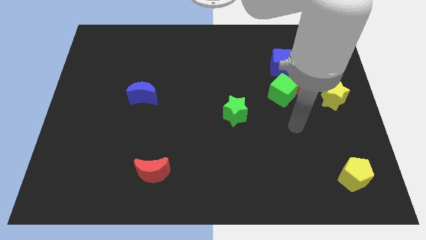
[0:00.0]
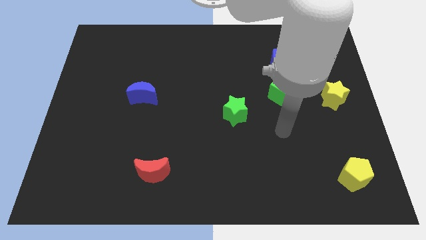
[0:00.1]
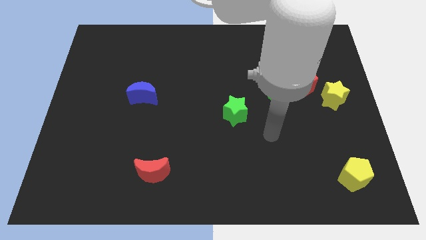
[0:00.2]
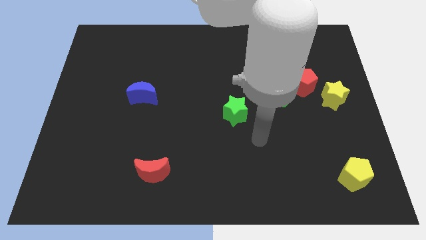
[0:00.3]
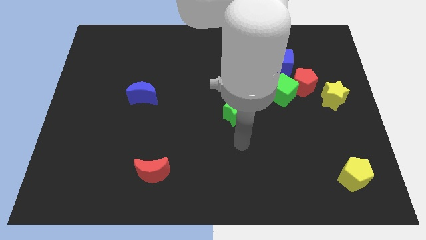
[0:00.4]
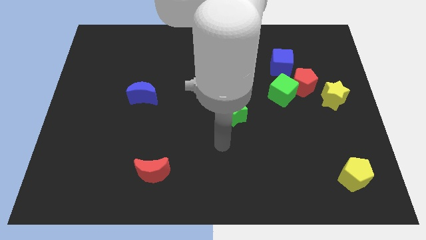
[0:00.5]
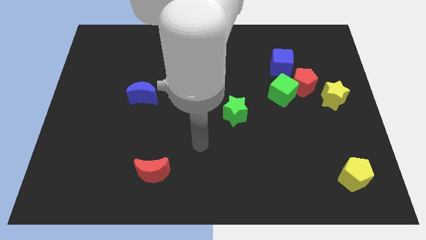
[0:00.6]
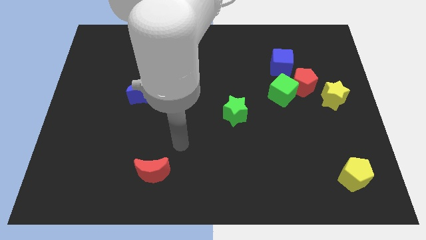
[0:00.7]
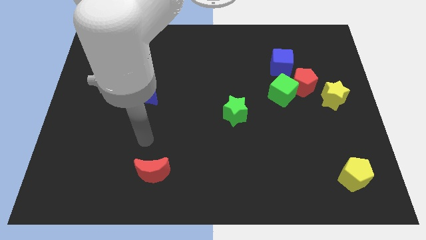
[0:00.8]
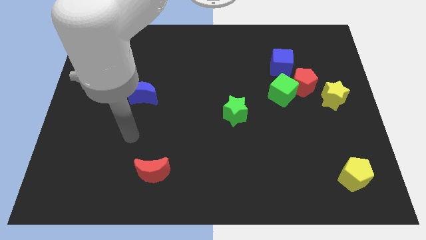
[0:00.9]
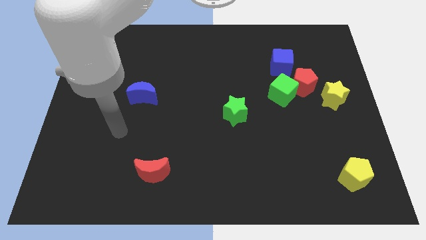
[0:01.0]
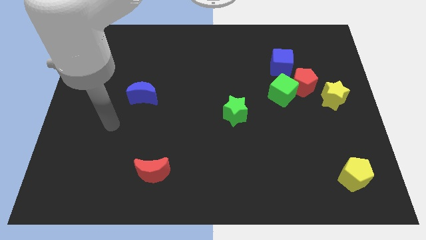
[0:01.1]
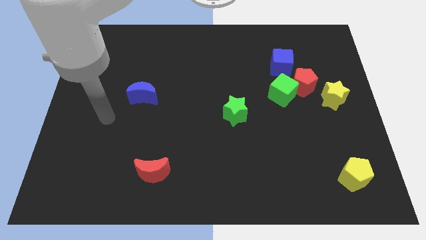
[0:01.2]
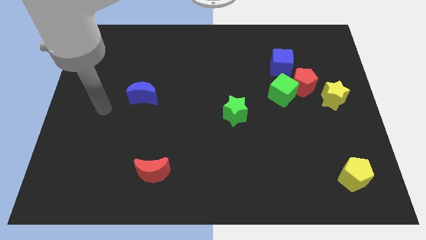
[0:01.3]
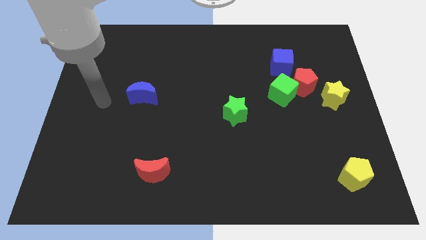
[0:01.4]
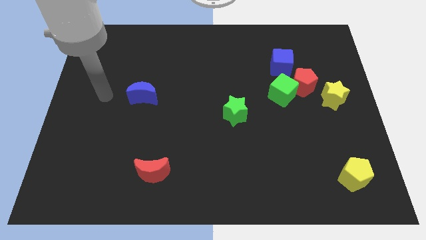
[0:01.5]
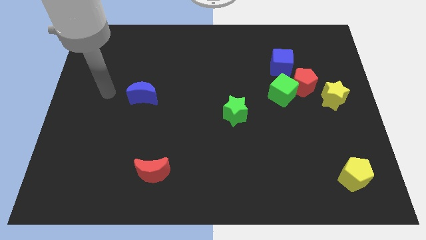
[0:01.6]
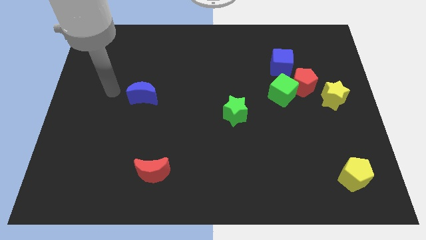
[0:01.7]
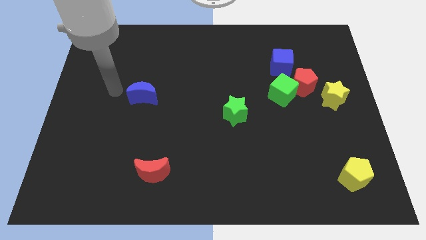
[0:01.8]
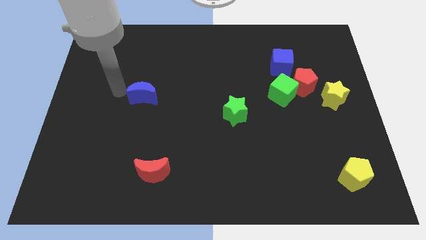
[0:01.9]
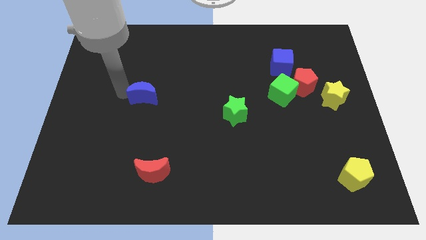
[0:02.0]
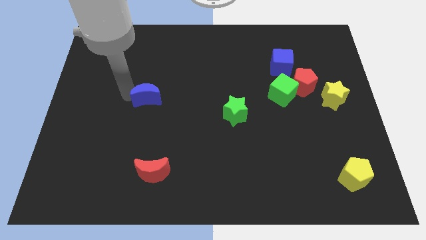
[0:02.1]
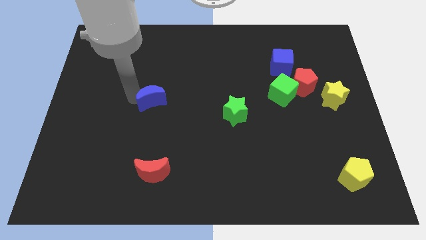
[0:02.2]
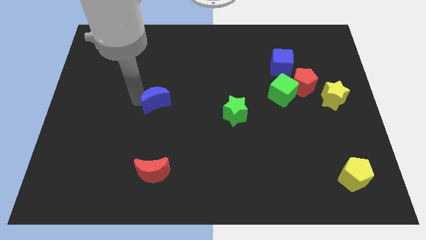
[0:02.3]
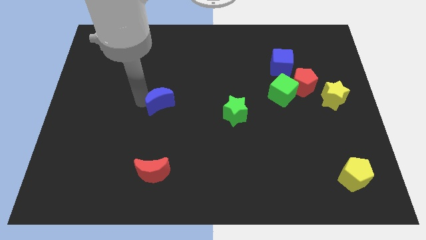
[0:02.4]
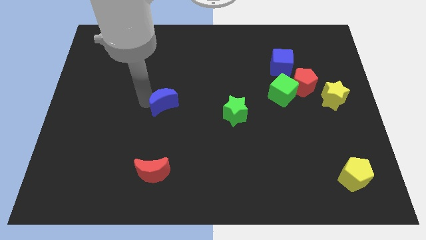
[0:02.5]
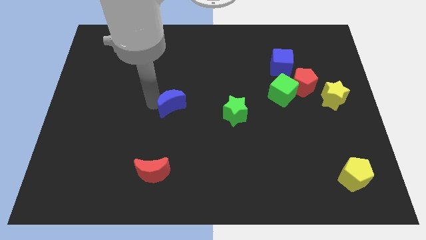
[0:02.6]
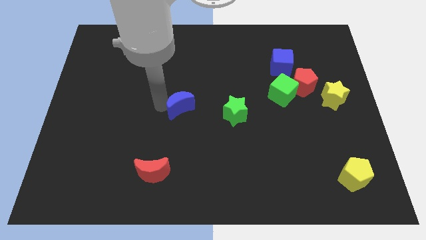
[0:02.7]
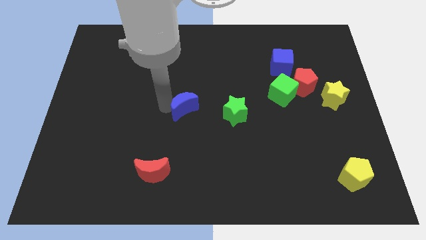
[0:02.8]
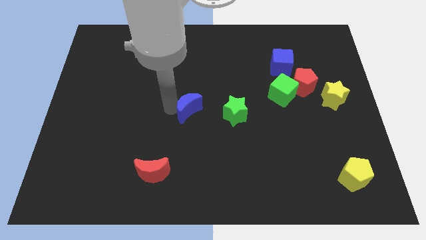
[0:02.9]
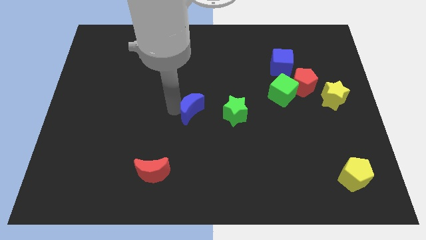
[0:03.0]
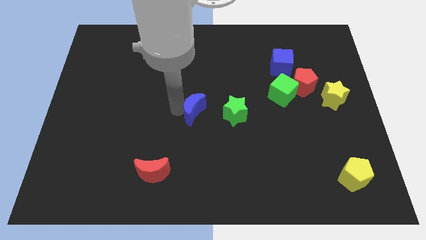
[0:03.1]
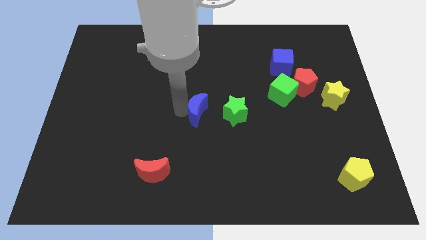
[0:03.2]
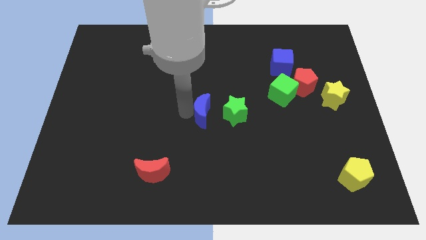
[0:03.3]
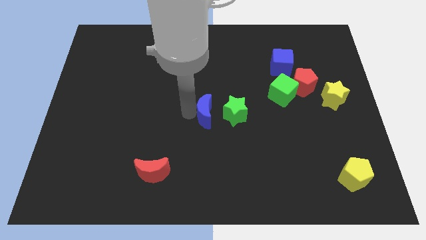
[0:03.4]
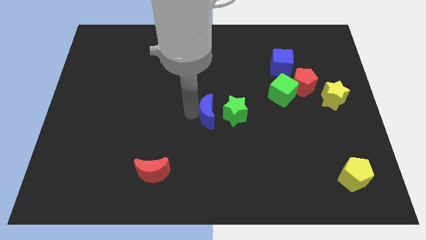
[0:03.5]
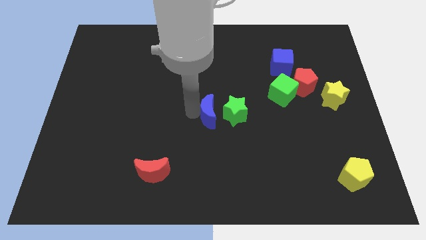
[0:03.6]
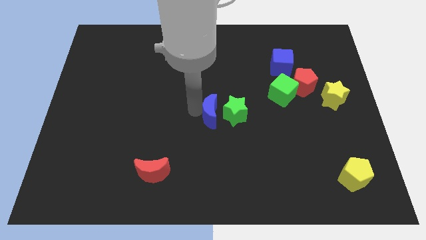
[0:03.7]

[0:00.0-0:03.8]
move the blue moon to the green star

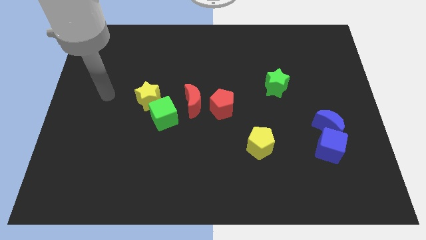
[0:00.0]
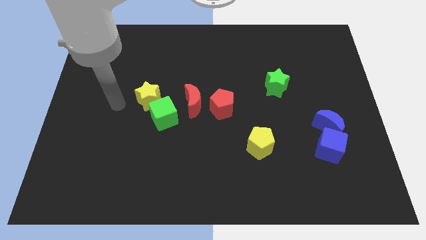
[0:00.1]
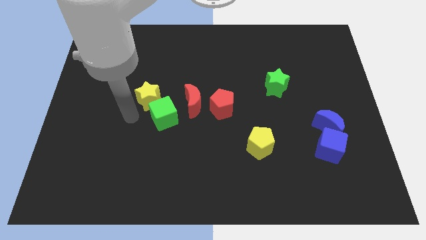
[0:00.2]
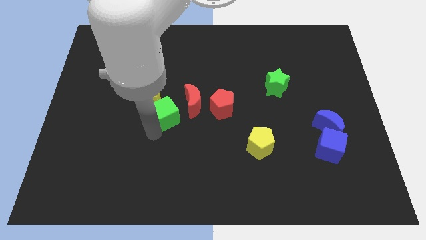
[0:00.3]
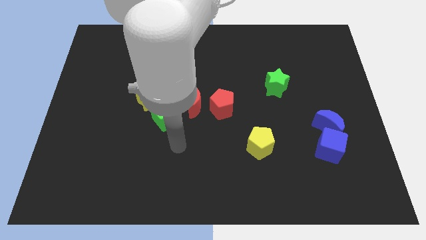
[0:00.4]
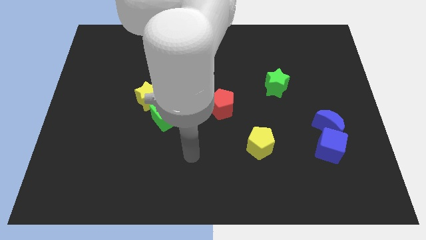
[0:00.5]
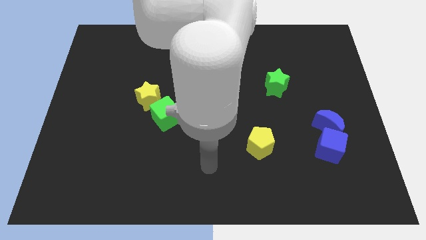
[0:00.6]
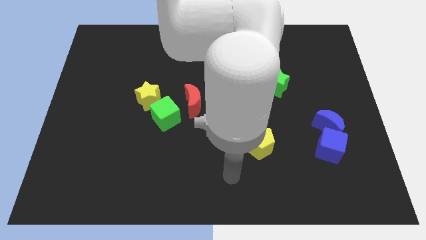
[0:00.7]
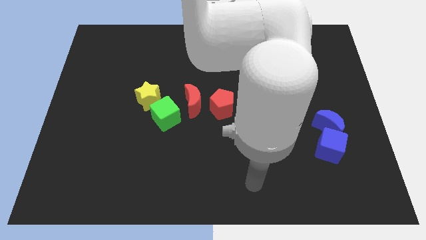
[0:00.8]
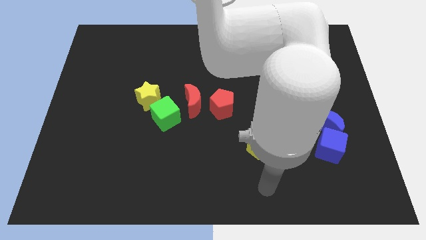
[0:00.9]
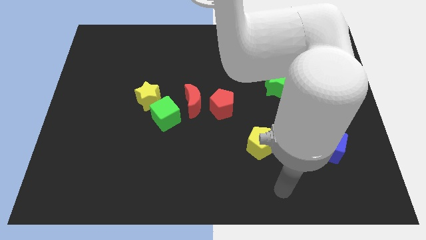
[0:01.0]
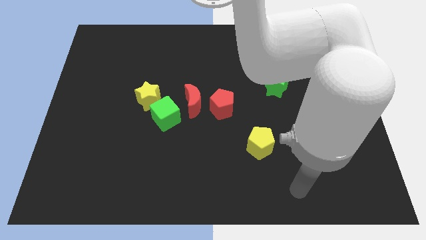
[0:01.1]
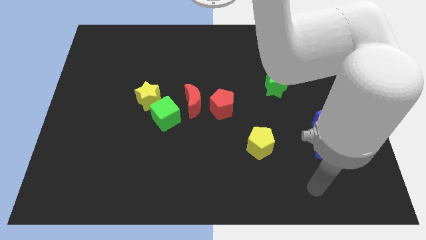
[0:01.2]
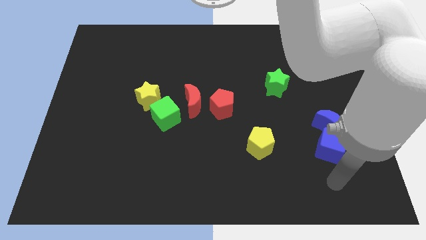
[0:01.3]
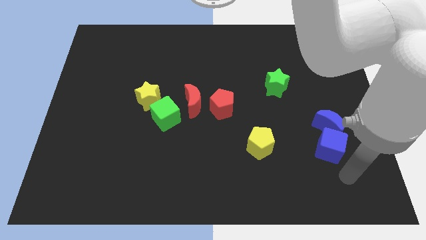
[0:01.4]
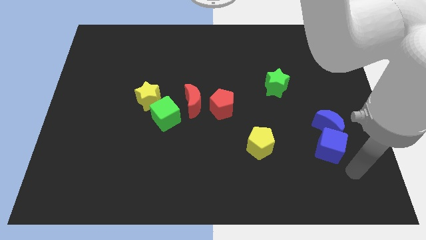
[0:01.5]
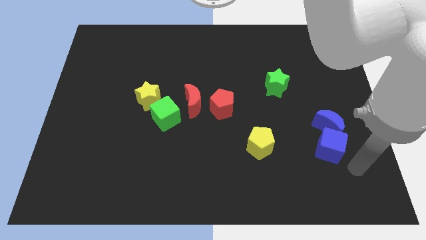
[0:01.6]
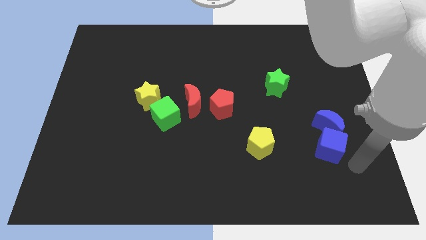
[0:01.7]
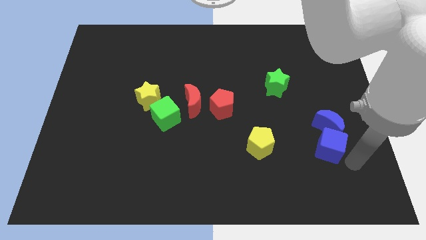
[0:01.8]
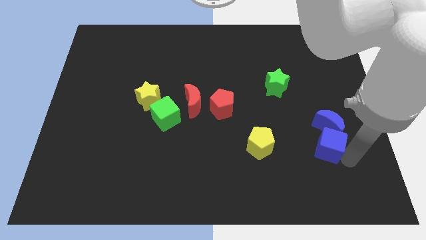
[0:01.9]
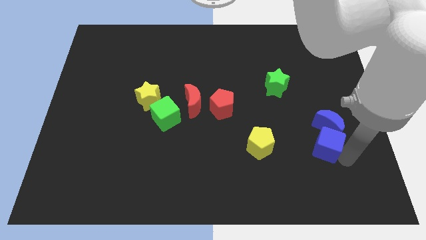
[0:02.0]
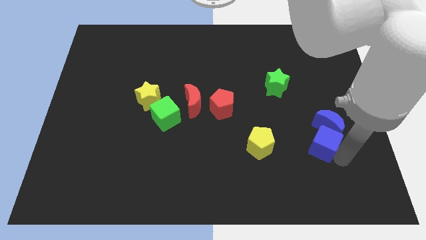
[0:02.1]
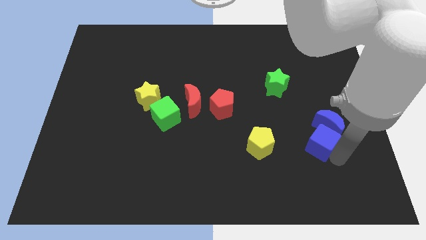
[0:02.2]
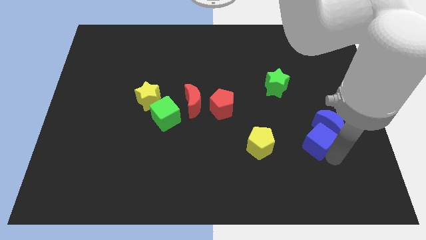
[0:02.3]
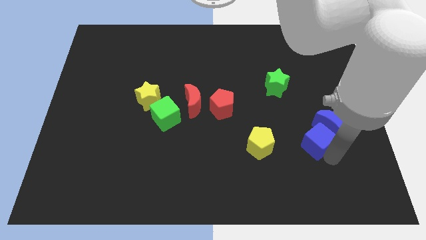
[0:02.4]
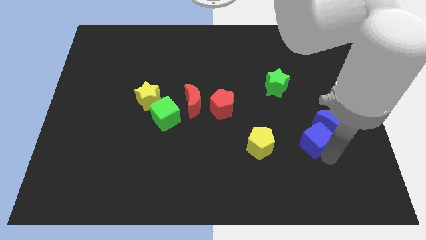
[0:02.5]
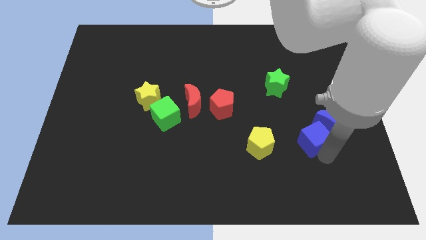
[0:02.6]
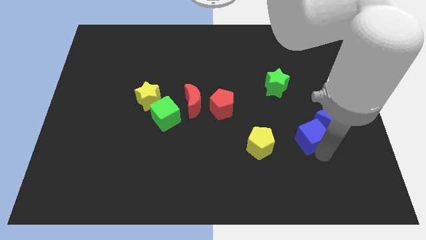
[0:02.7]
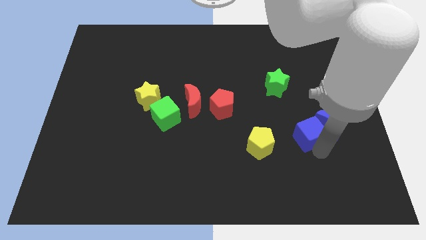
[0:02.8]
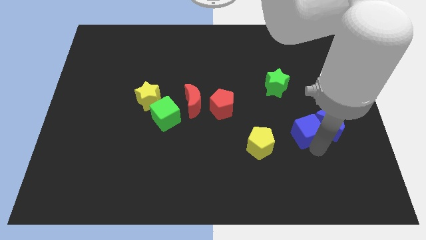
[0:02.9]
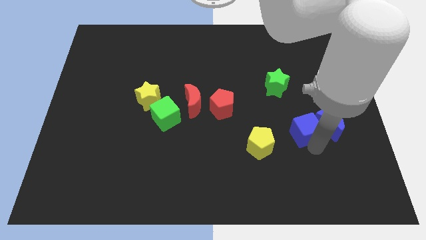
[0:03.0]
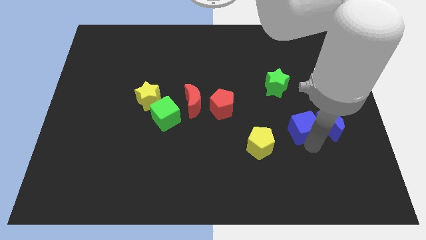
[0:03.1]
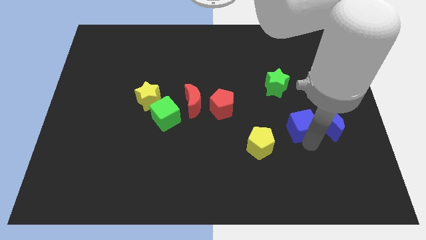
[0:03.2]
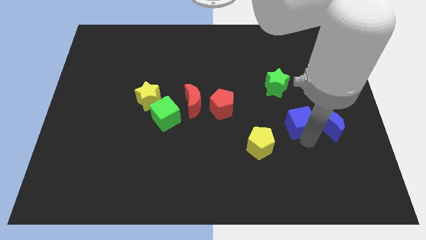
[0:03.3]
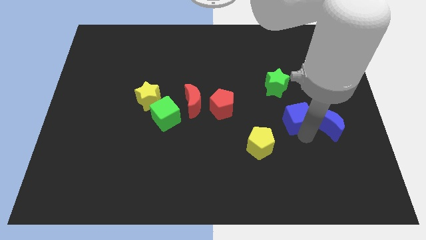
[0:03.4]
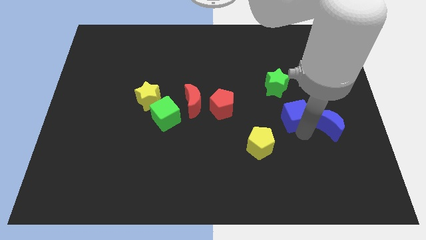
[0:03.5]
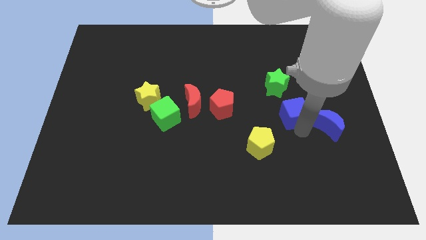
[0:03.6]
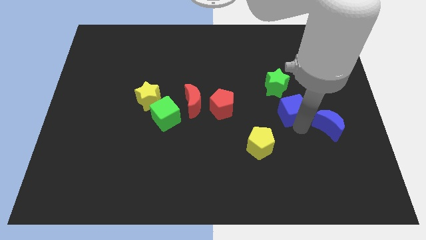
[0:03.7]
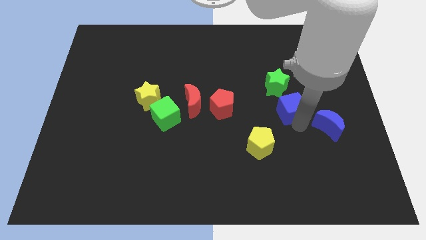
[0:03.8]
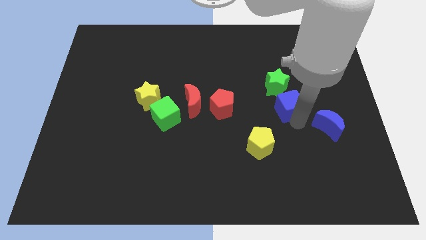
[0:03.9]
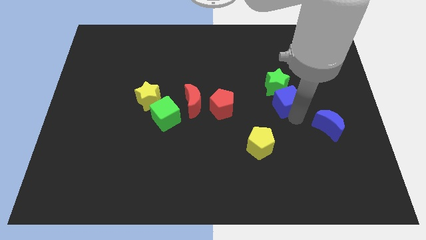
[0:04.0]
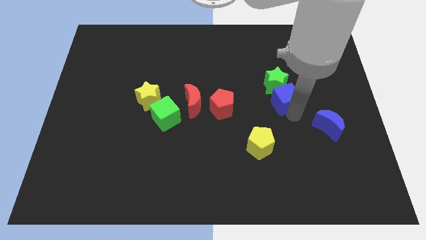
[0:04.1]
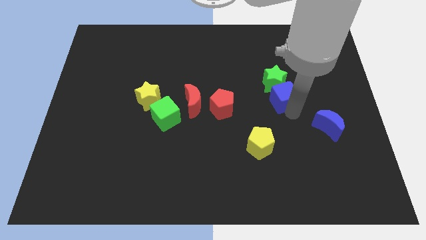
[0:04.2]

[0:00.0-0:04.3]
move the blue cube to the green star
